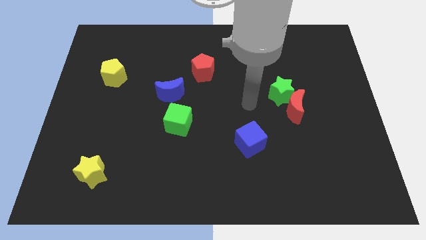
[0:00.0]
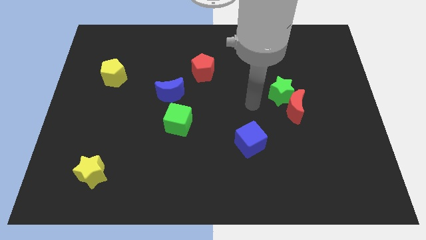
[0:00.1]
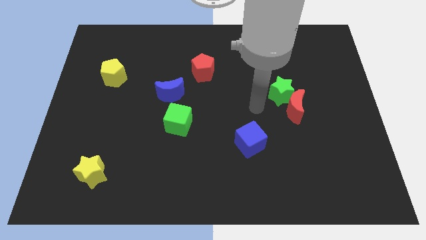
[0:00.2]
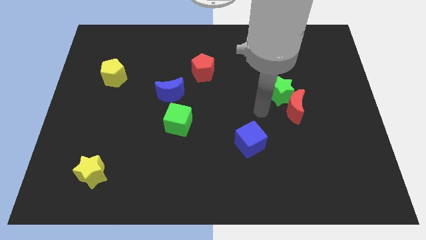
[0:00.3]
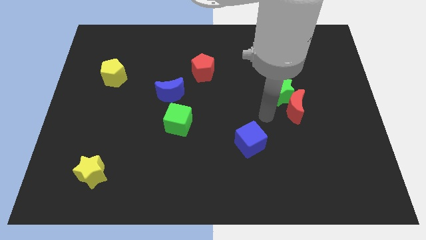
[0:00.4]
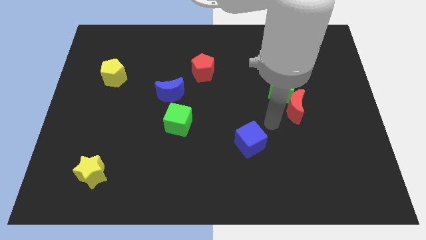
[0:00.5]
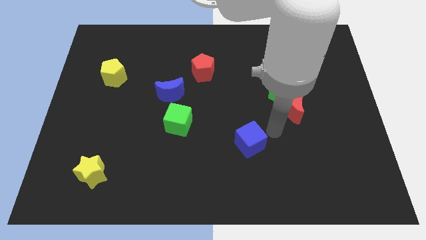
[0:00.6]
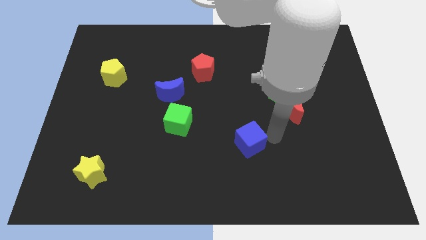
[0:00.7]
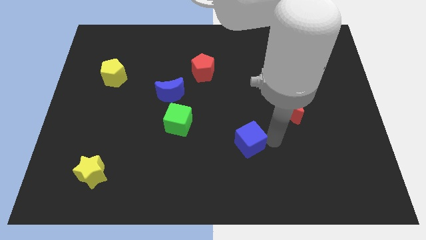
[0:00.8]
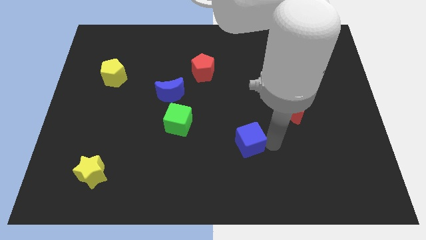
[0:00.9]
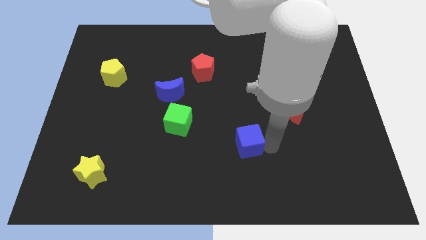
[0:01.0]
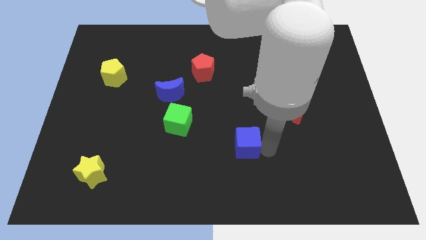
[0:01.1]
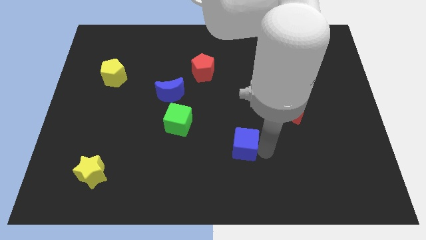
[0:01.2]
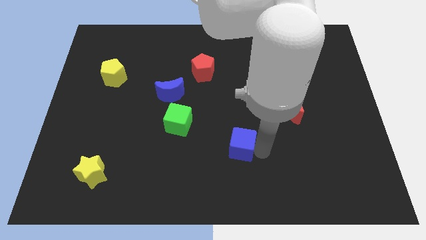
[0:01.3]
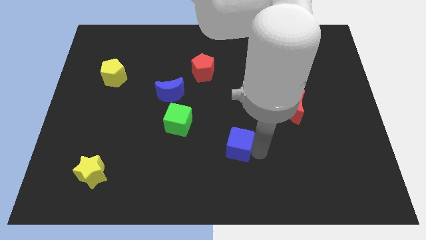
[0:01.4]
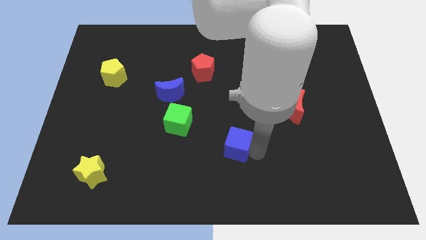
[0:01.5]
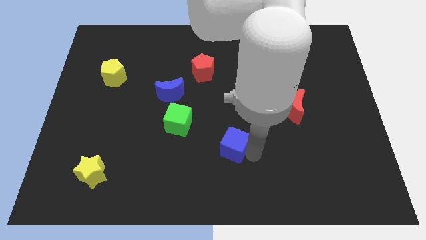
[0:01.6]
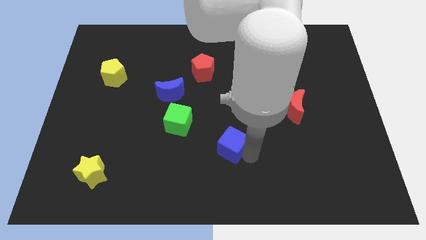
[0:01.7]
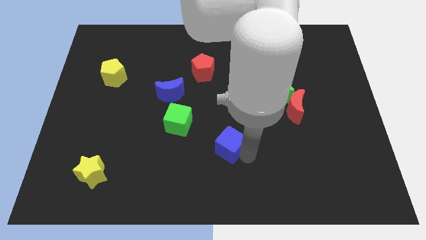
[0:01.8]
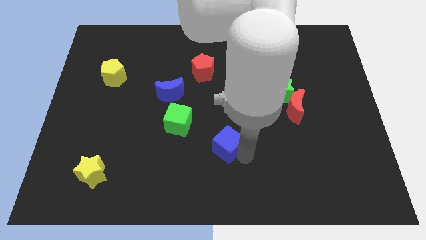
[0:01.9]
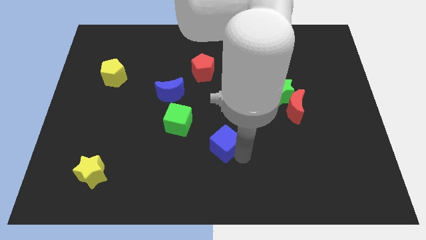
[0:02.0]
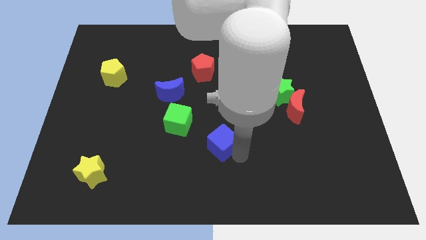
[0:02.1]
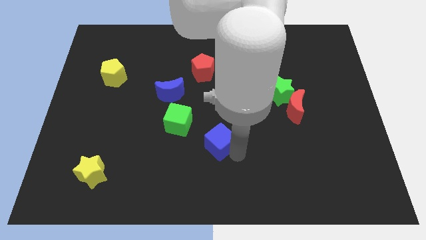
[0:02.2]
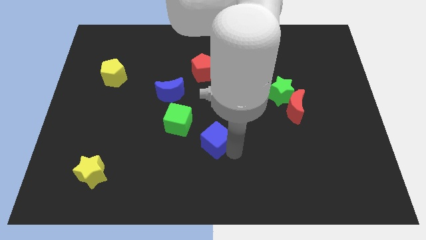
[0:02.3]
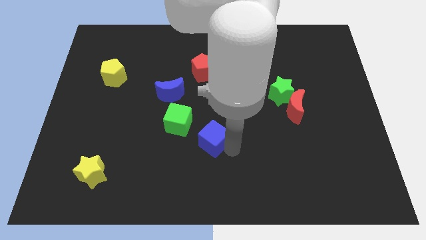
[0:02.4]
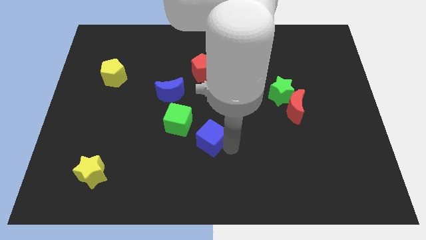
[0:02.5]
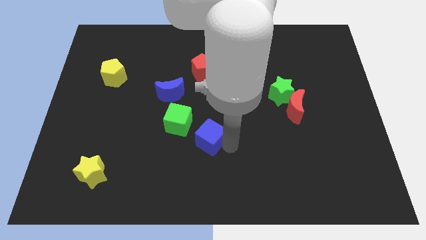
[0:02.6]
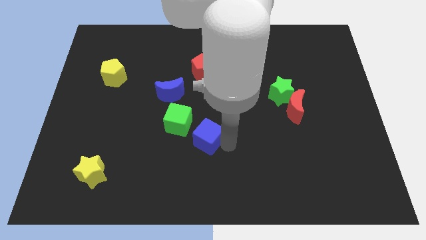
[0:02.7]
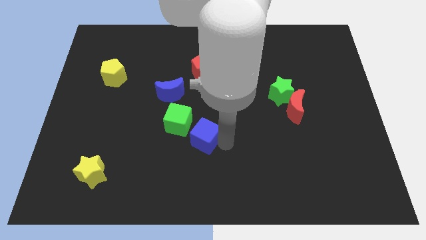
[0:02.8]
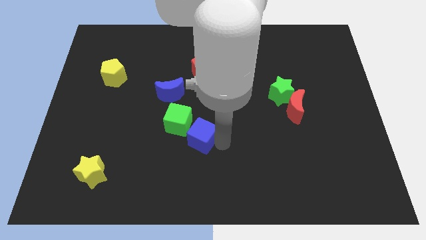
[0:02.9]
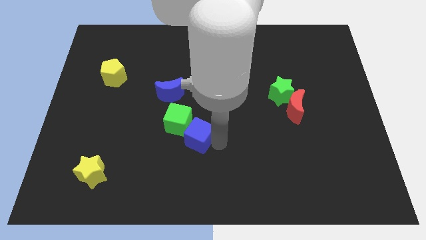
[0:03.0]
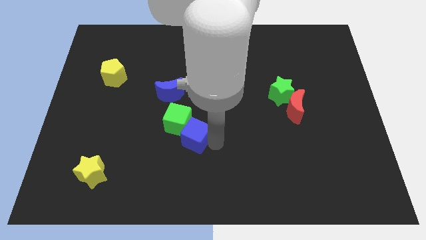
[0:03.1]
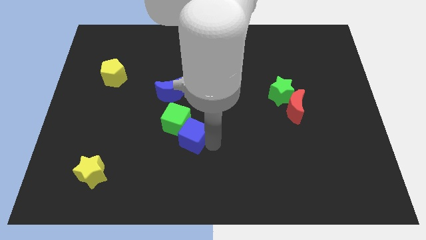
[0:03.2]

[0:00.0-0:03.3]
slide the blue cube to the green cube

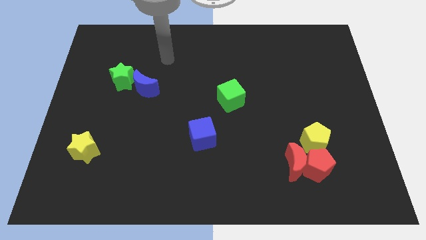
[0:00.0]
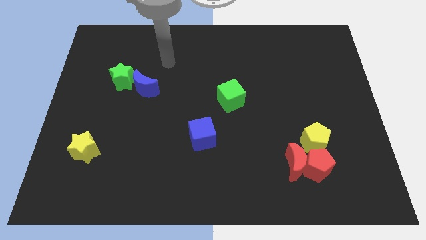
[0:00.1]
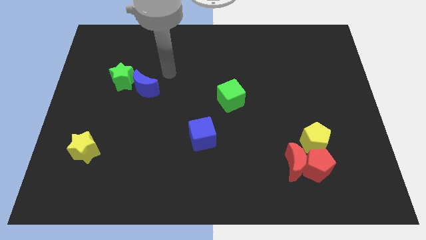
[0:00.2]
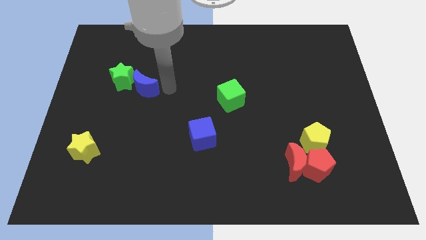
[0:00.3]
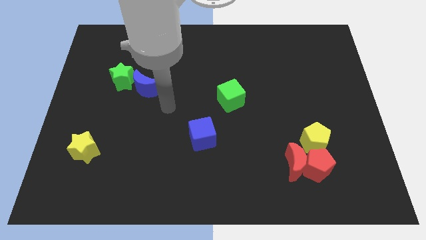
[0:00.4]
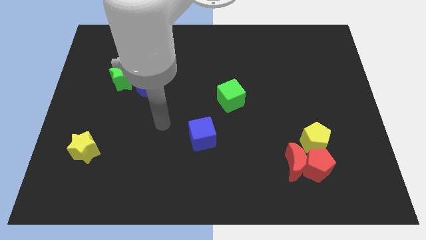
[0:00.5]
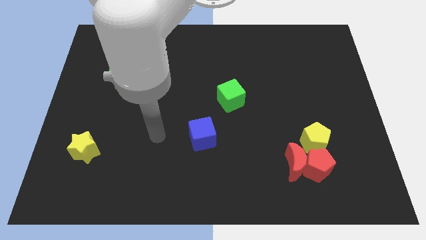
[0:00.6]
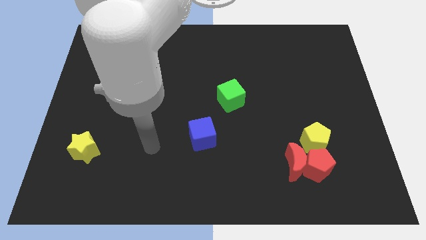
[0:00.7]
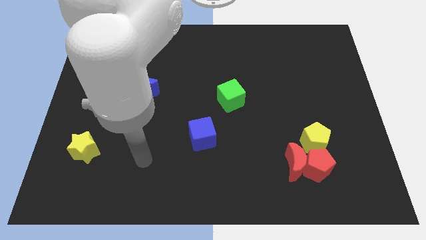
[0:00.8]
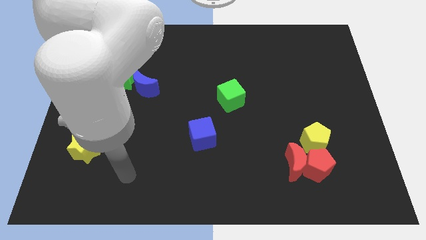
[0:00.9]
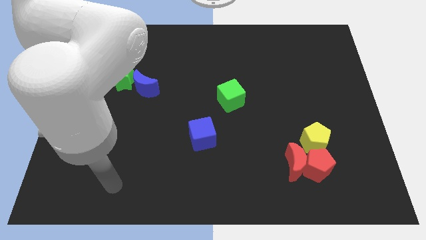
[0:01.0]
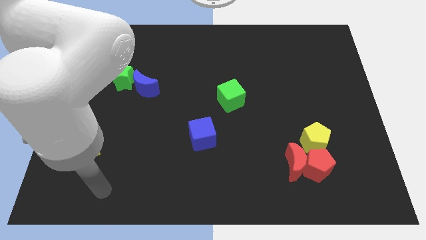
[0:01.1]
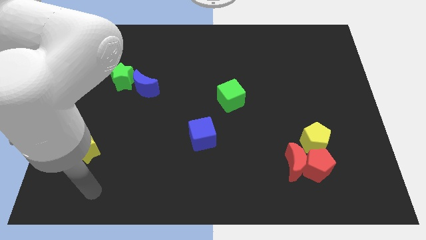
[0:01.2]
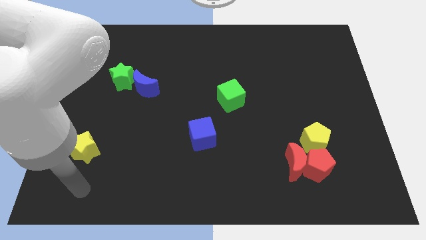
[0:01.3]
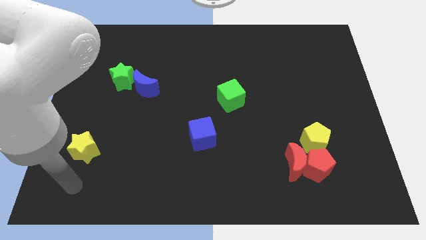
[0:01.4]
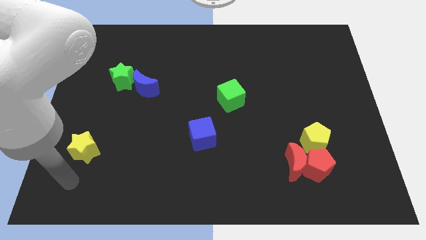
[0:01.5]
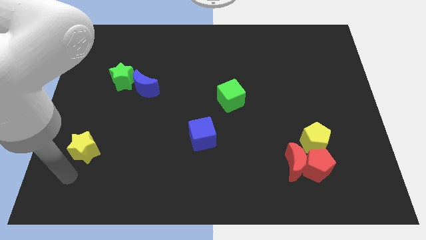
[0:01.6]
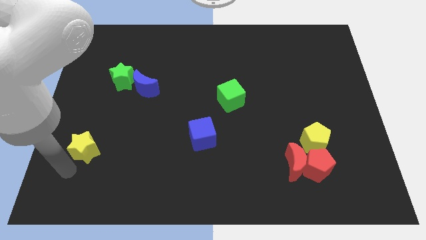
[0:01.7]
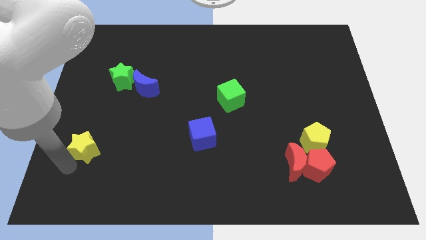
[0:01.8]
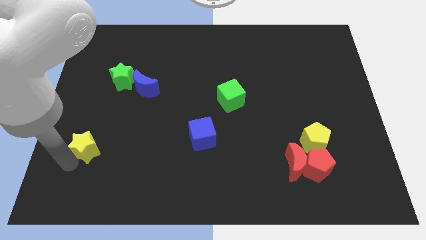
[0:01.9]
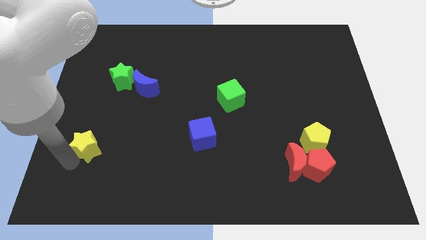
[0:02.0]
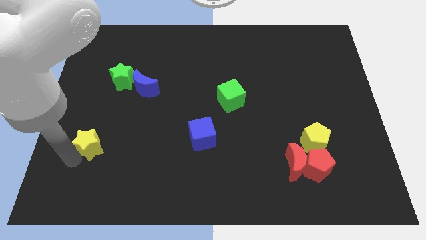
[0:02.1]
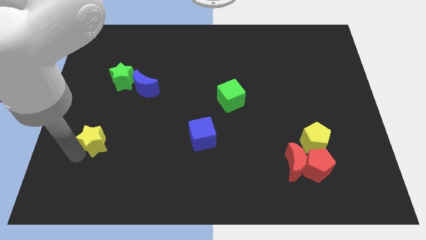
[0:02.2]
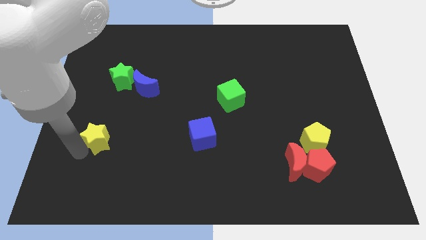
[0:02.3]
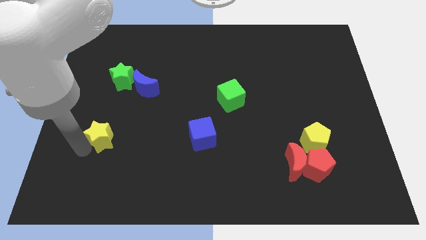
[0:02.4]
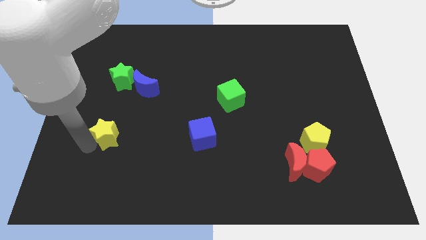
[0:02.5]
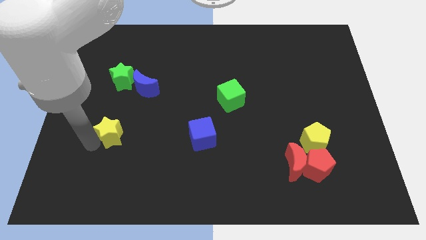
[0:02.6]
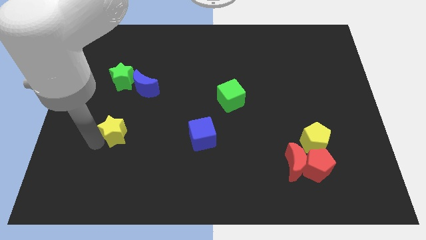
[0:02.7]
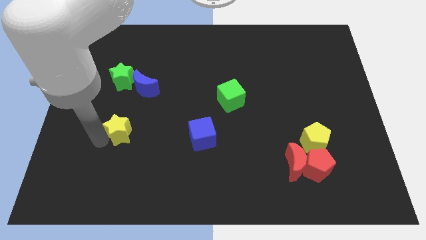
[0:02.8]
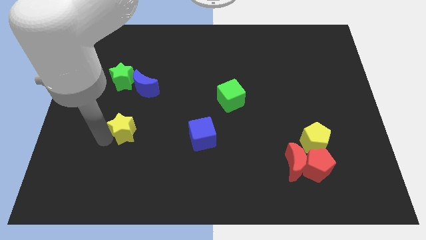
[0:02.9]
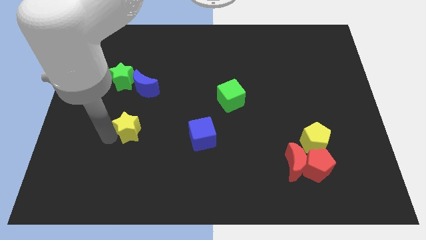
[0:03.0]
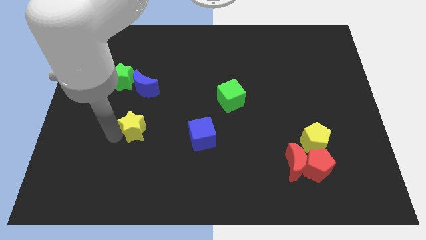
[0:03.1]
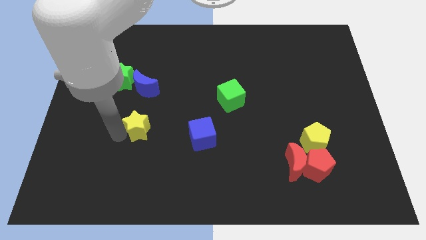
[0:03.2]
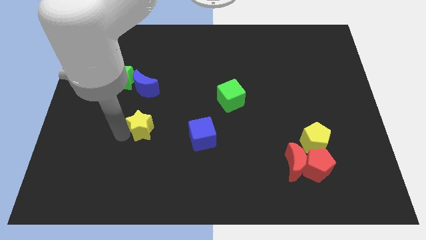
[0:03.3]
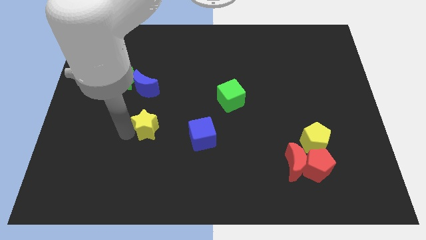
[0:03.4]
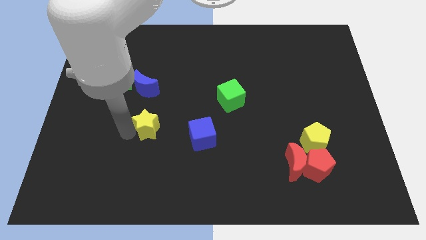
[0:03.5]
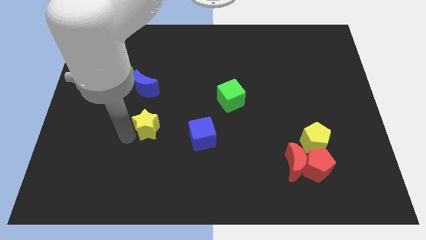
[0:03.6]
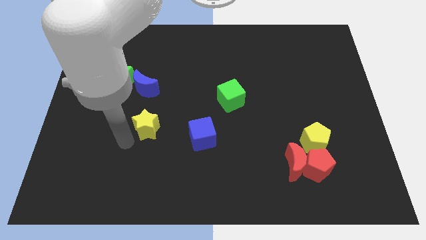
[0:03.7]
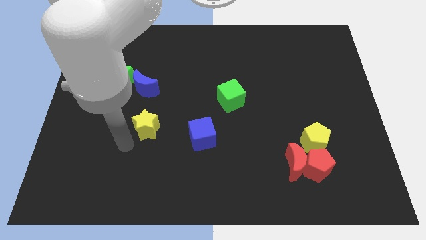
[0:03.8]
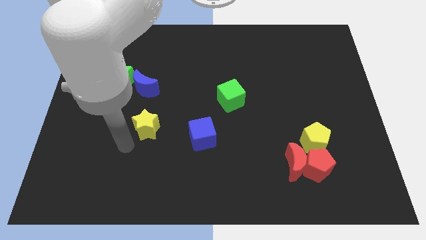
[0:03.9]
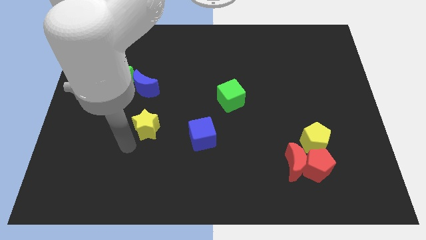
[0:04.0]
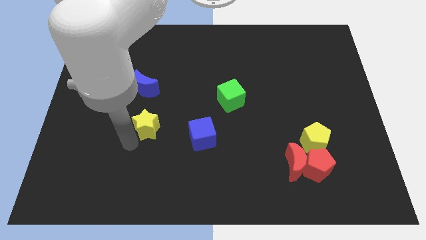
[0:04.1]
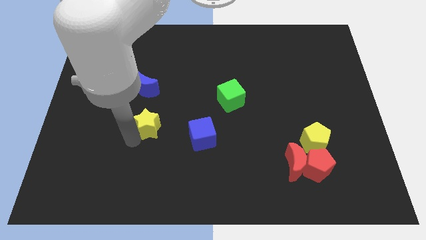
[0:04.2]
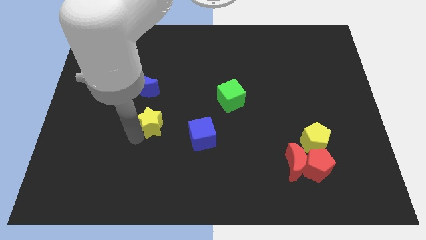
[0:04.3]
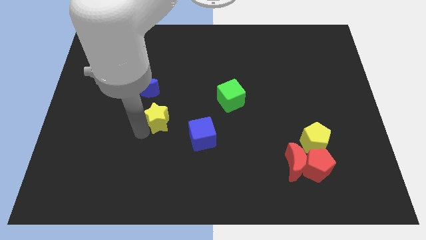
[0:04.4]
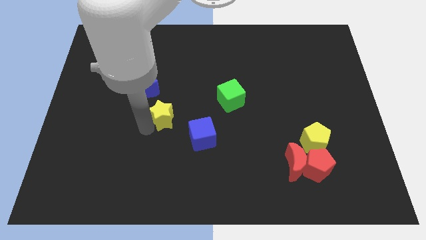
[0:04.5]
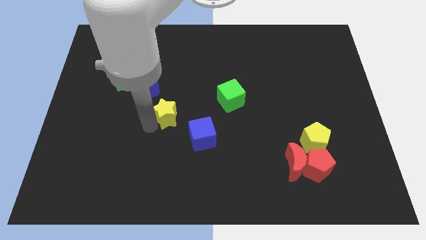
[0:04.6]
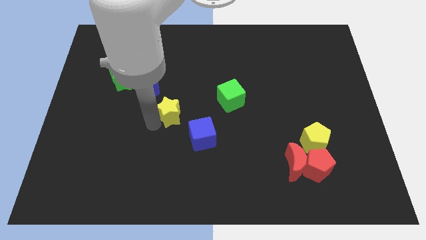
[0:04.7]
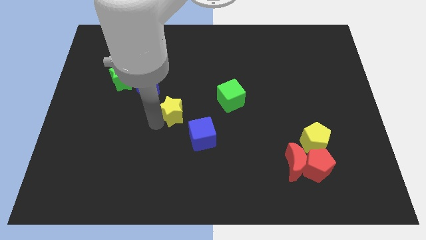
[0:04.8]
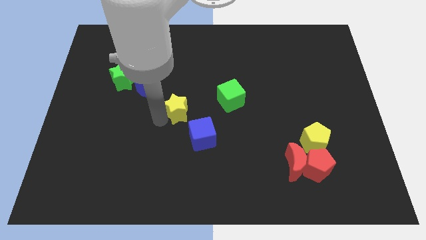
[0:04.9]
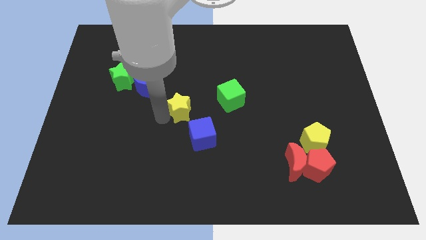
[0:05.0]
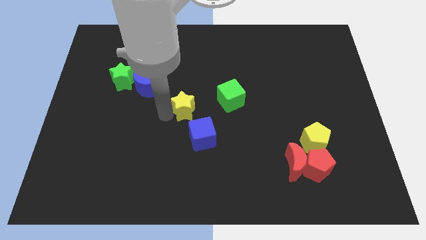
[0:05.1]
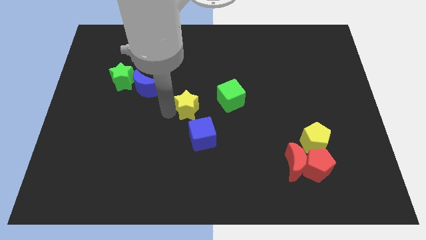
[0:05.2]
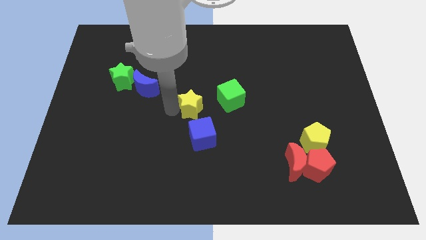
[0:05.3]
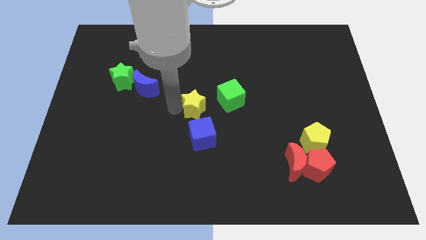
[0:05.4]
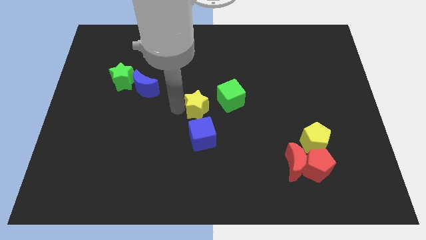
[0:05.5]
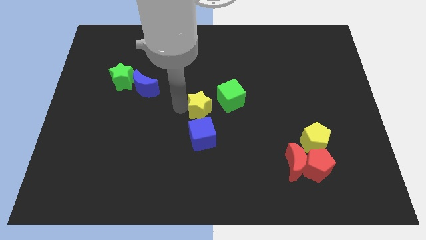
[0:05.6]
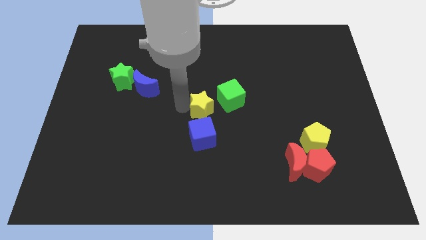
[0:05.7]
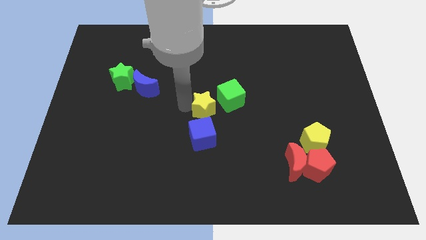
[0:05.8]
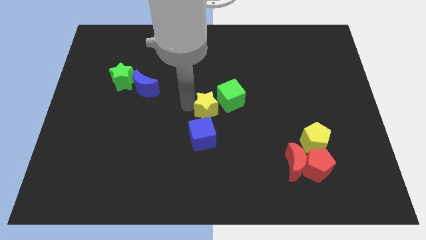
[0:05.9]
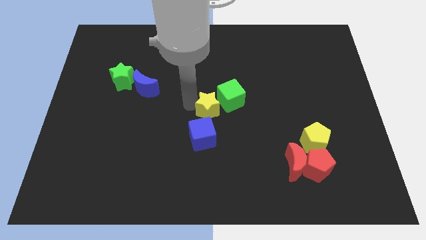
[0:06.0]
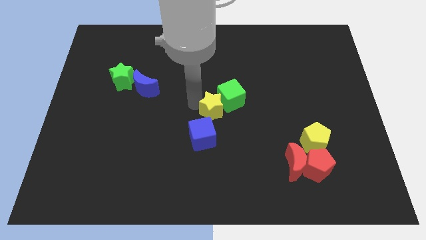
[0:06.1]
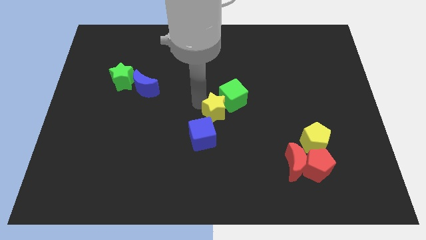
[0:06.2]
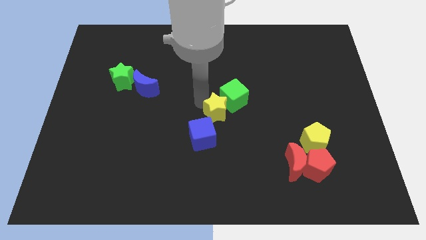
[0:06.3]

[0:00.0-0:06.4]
push the yellow star next to the green cube
